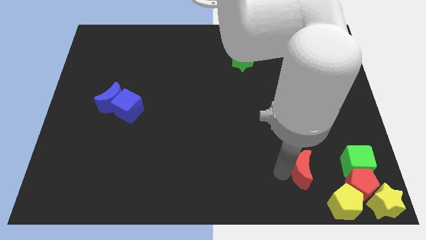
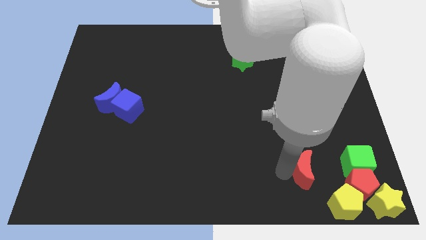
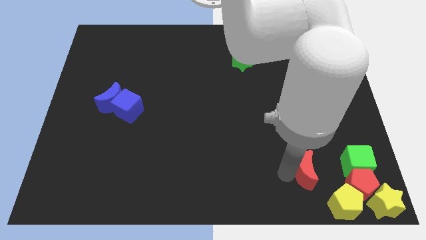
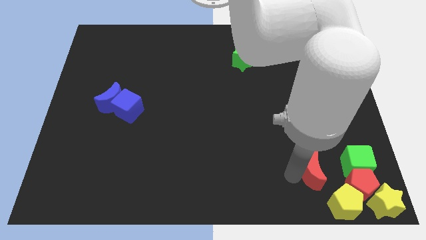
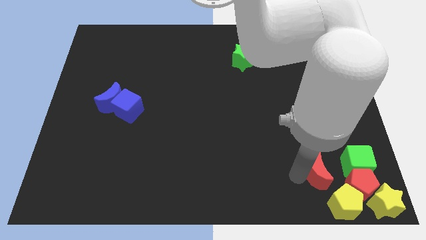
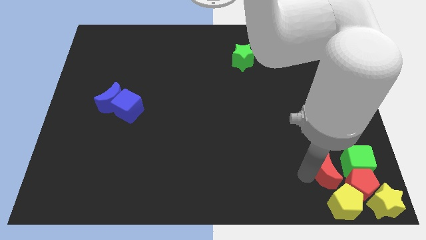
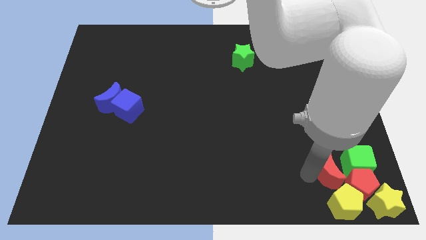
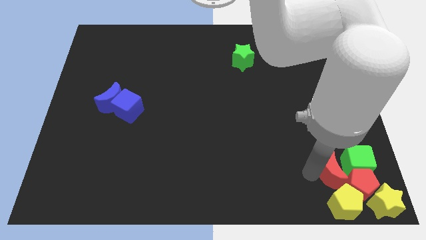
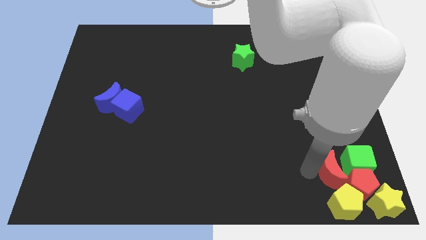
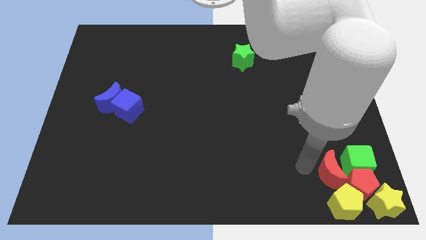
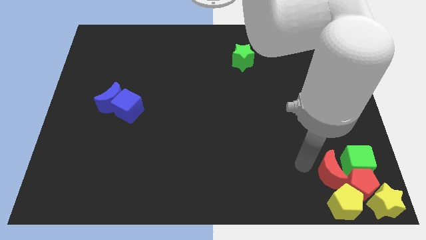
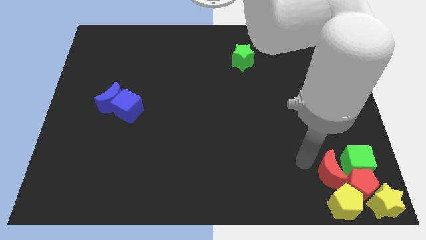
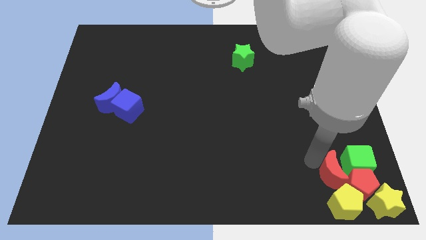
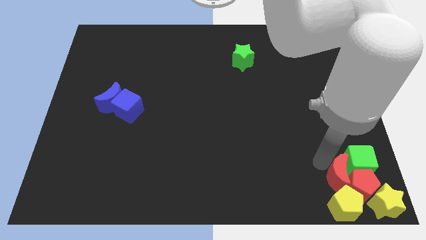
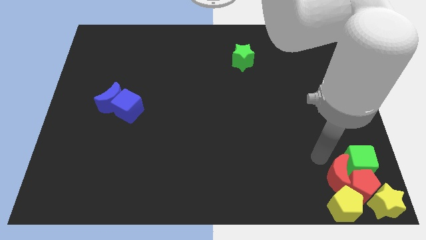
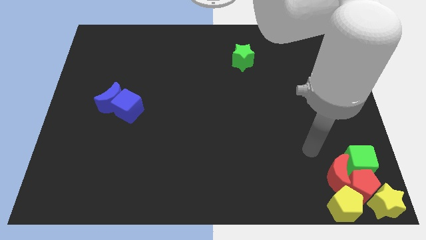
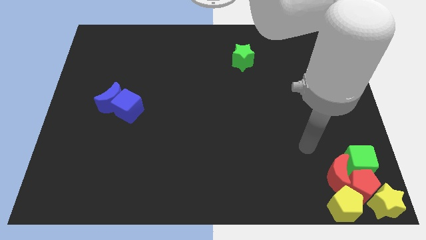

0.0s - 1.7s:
move the red moon into the green cube

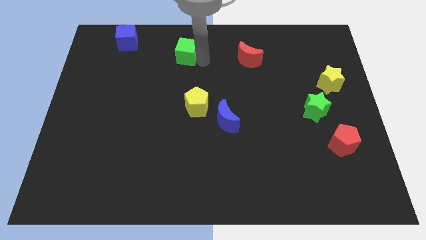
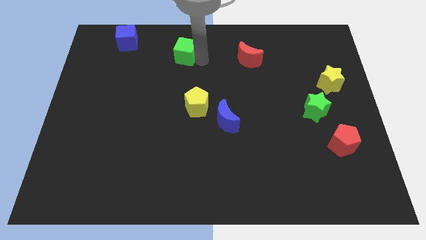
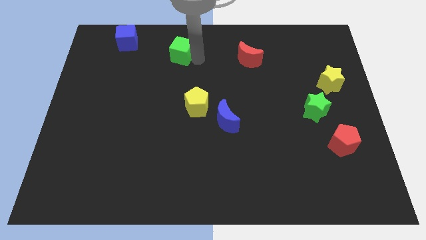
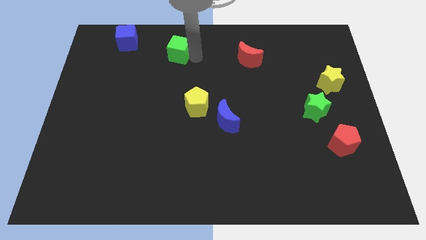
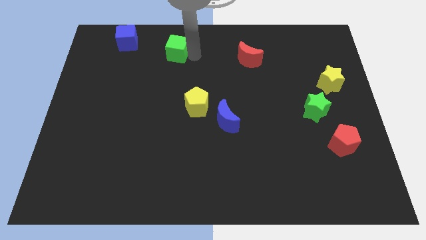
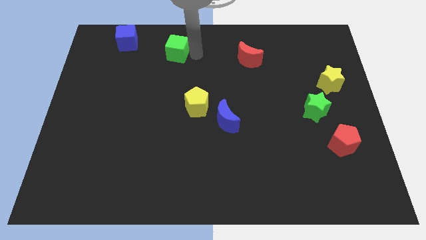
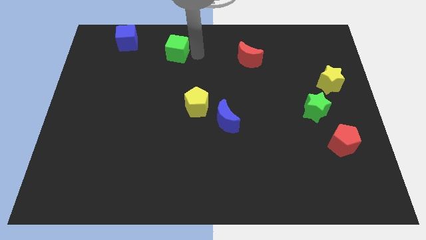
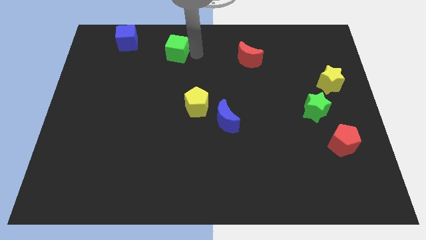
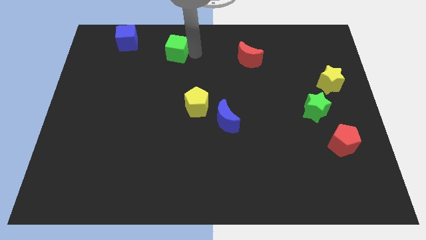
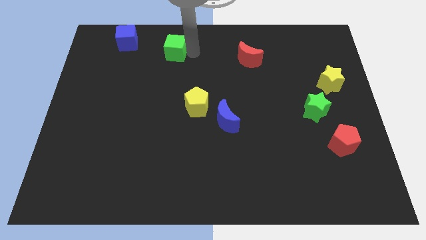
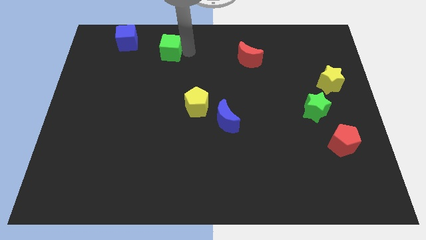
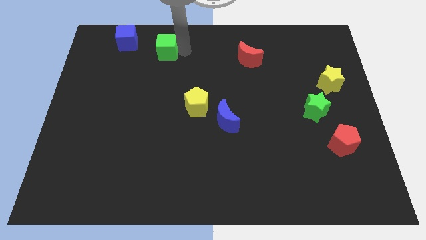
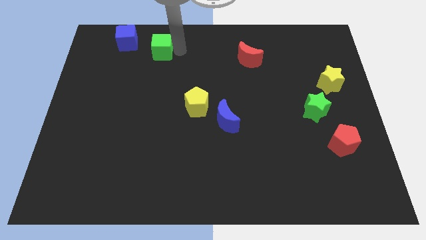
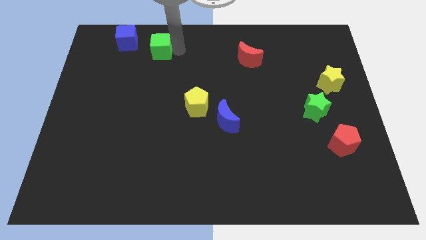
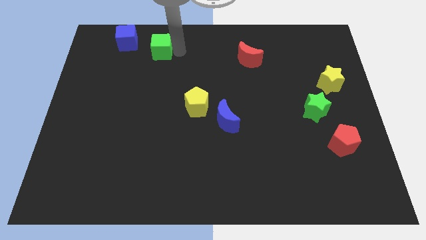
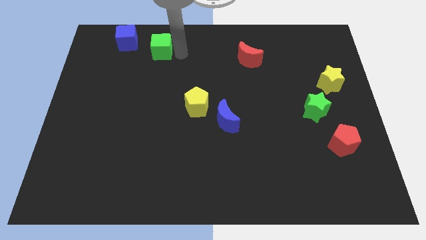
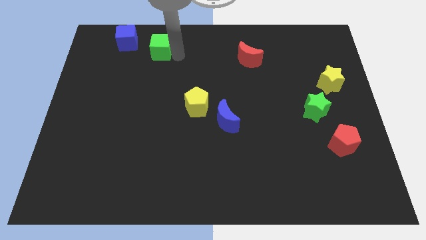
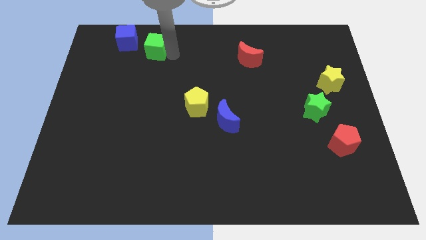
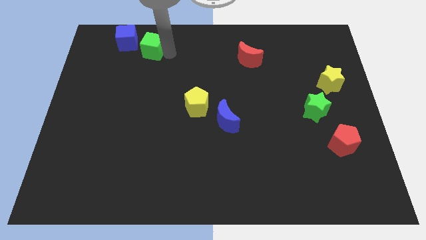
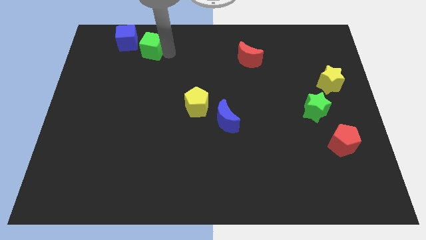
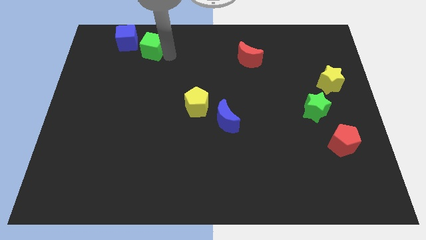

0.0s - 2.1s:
slide green cube towards blue cube

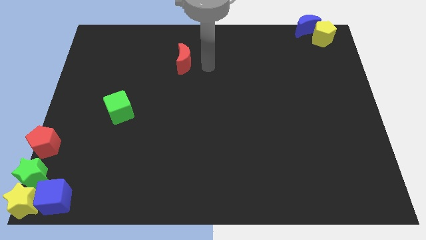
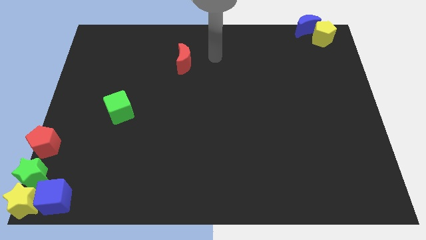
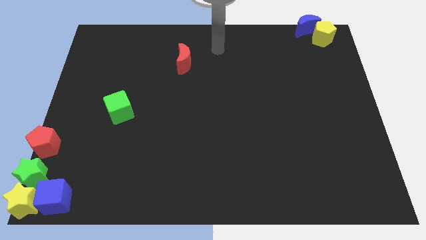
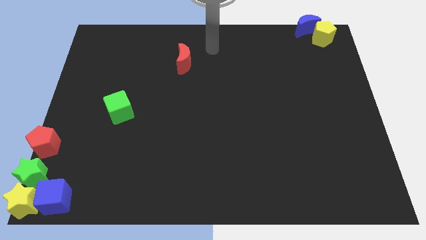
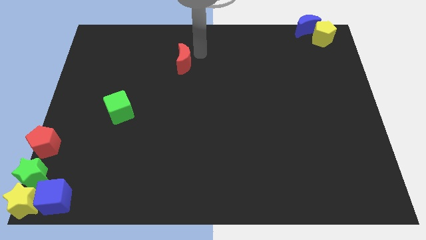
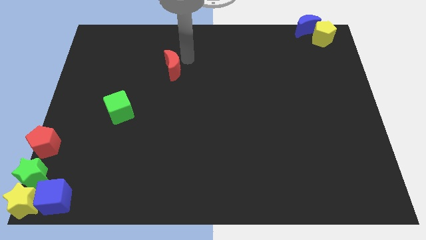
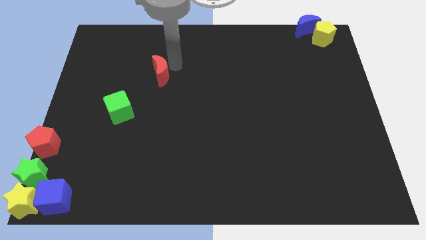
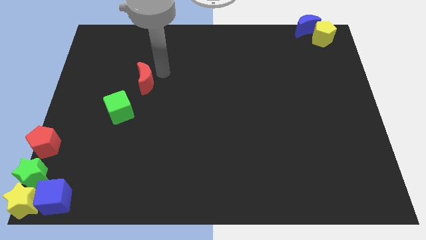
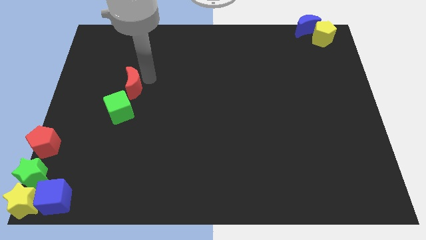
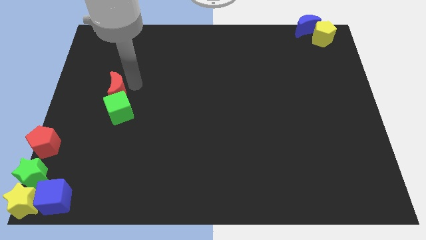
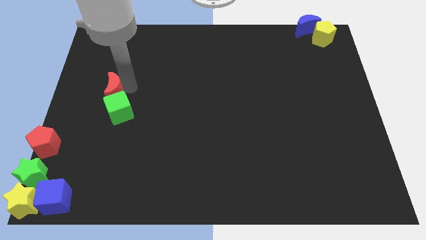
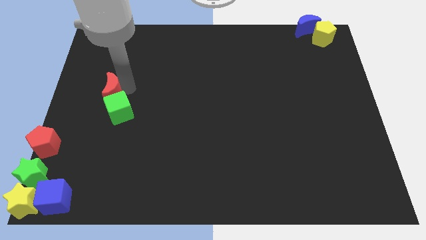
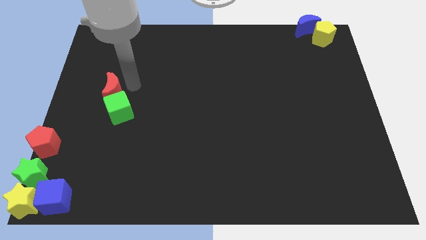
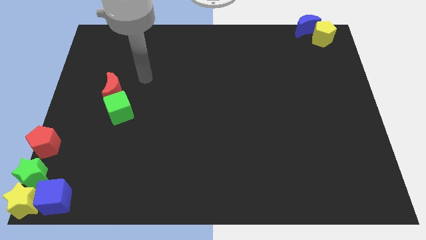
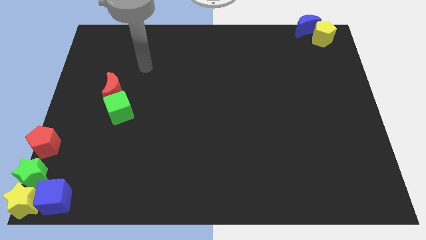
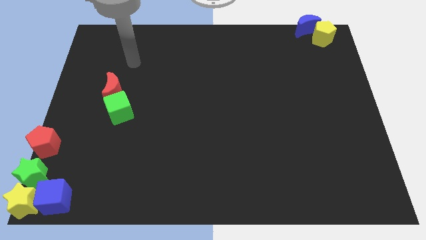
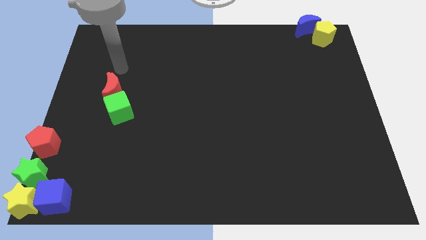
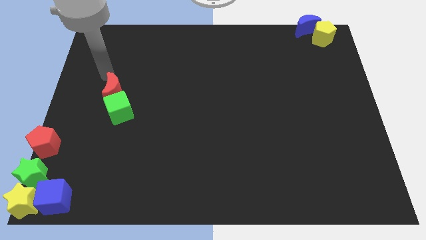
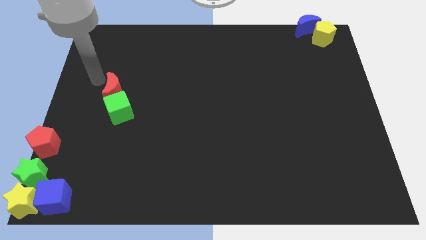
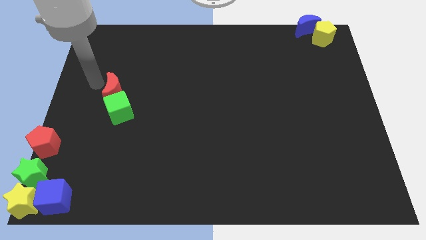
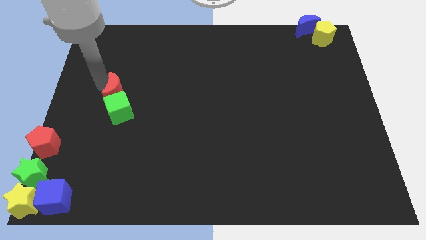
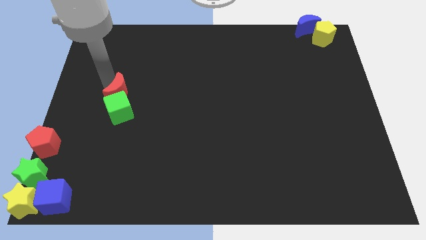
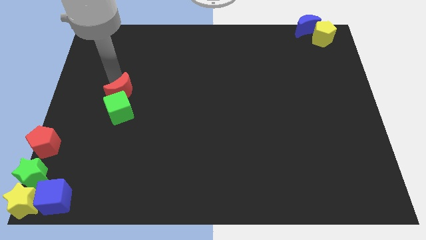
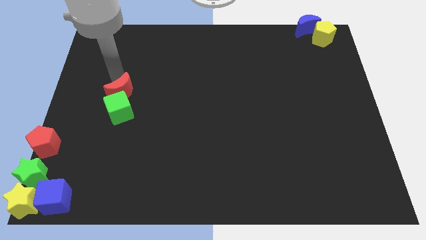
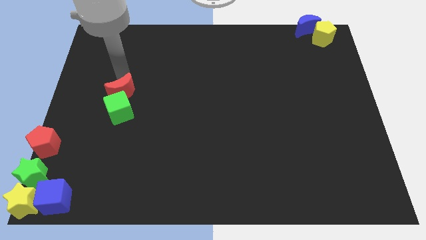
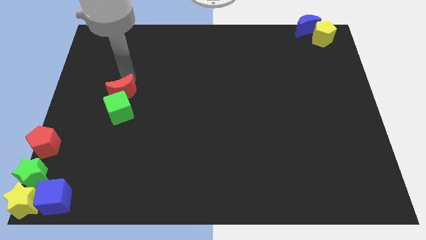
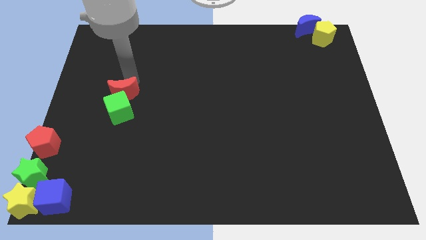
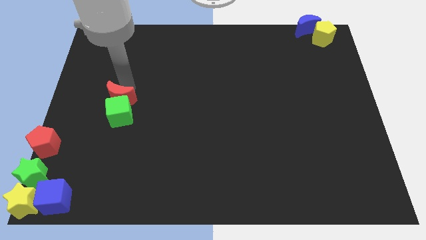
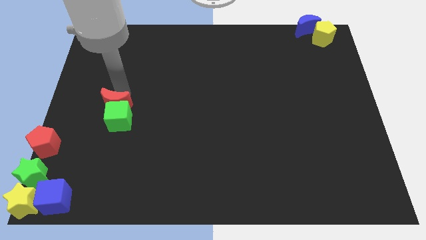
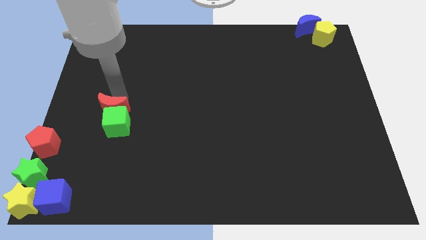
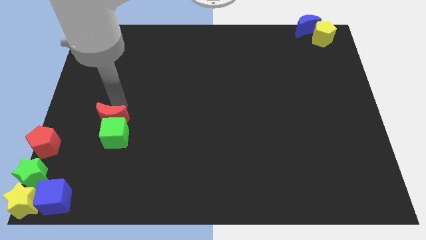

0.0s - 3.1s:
move the red moon into the top of the green cube

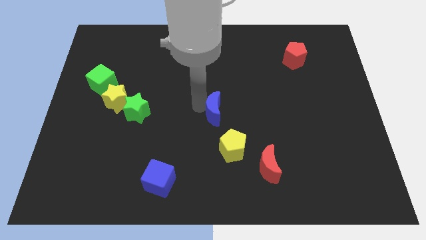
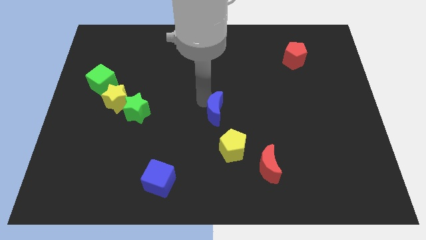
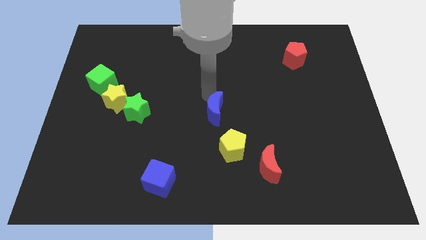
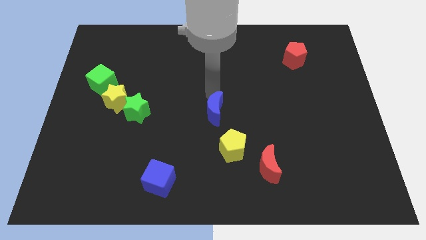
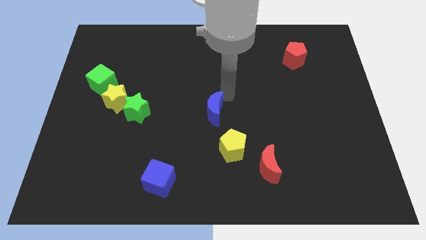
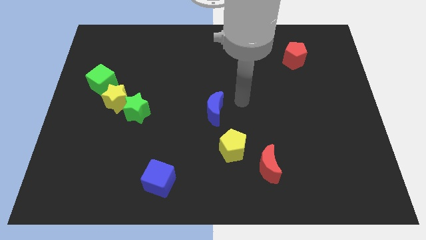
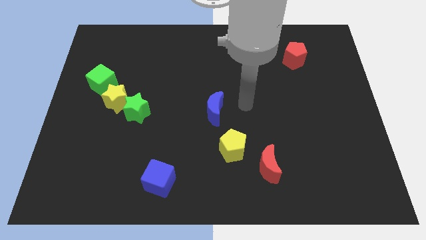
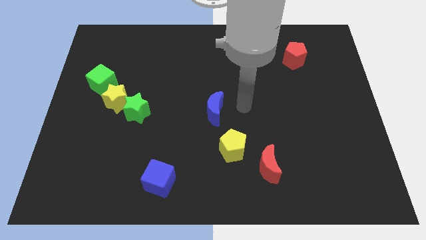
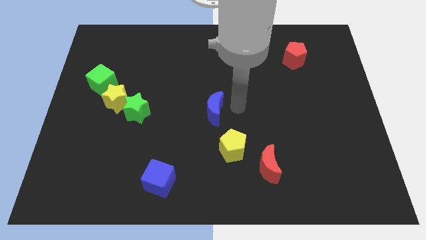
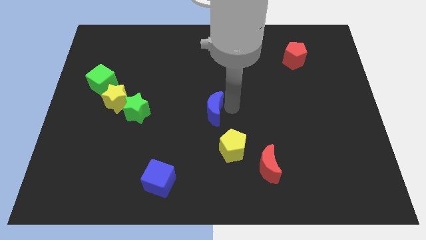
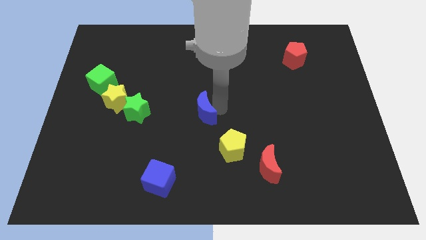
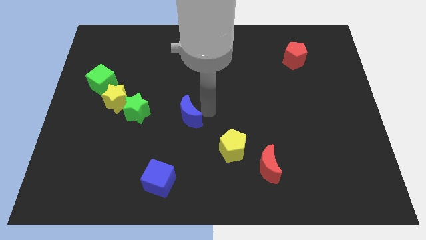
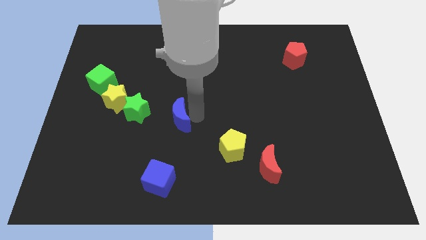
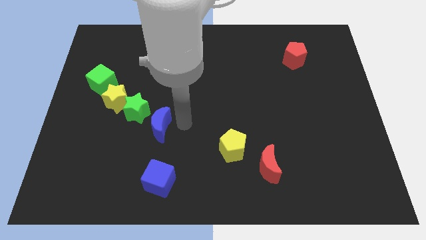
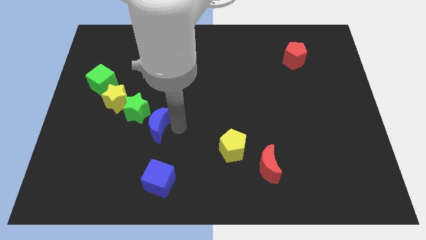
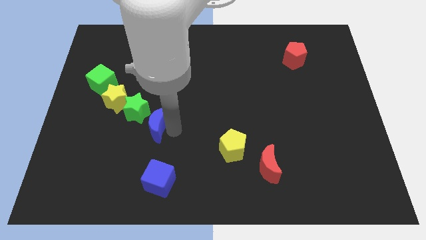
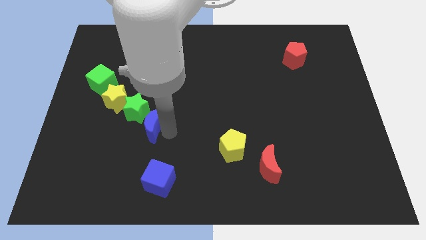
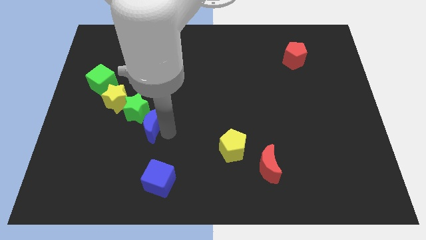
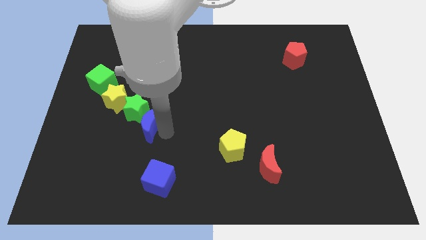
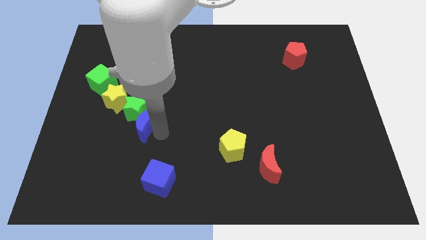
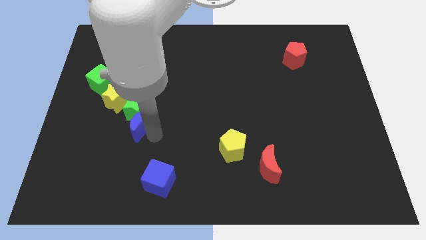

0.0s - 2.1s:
slide blue moon into green star
